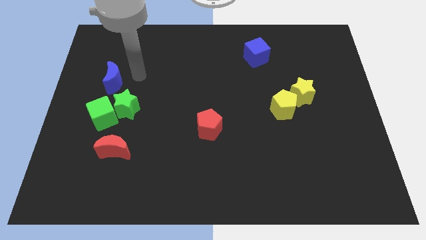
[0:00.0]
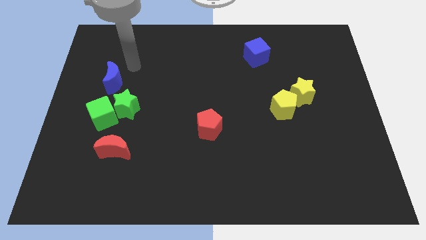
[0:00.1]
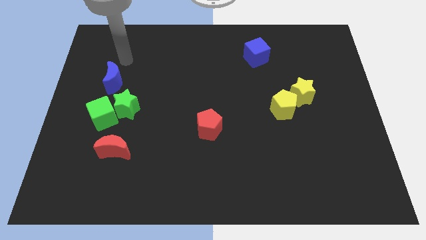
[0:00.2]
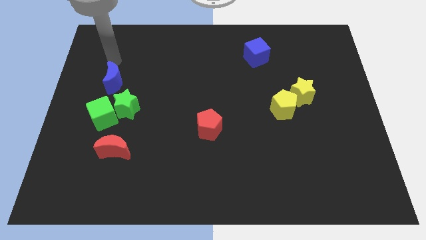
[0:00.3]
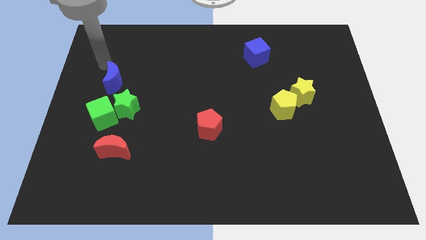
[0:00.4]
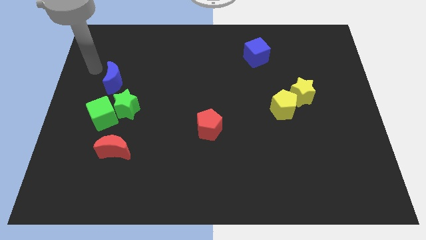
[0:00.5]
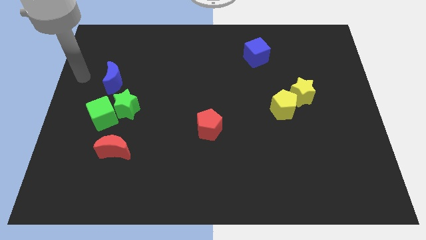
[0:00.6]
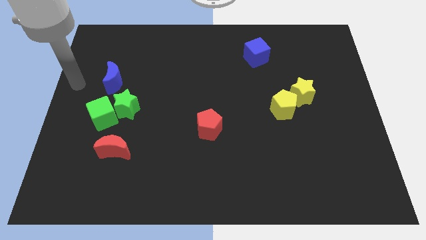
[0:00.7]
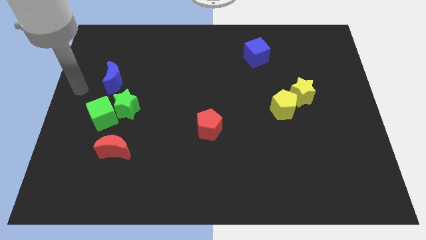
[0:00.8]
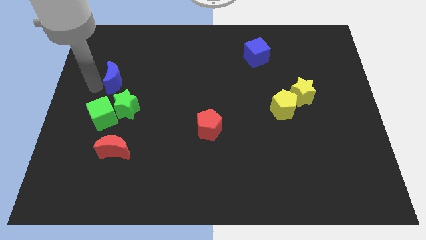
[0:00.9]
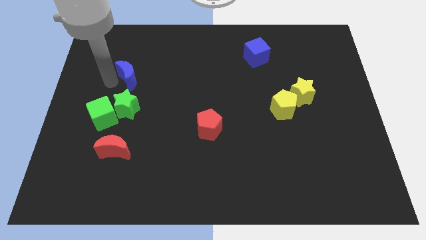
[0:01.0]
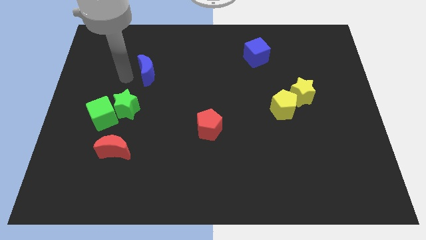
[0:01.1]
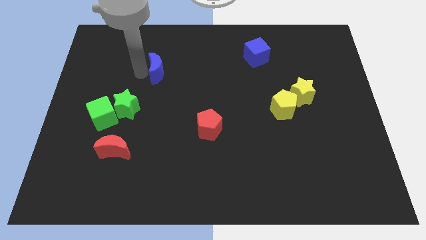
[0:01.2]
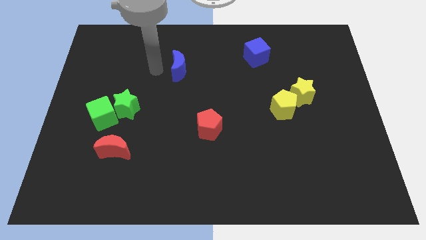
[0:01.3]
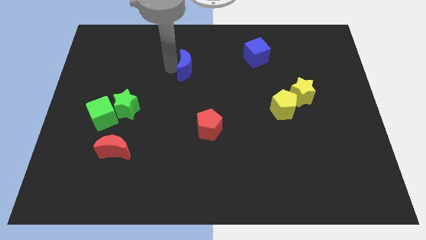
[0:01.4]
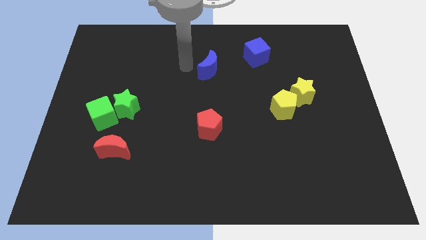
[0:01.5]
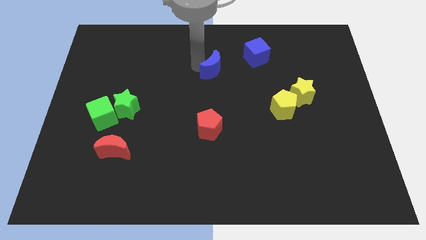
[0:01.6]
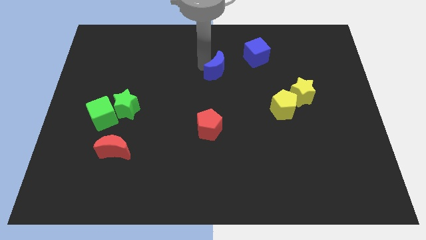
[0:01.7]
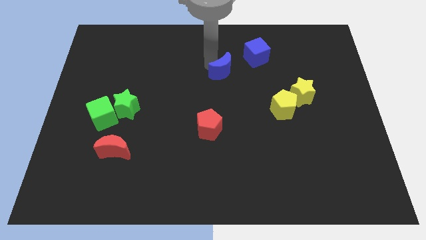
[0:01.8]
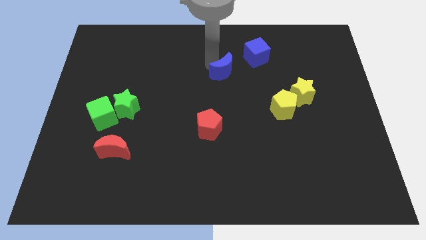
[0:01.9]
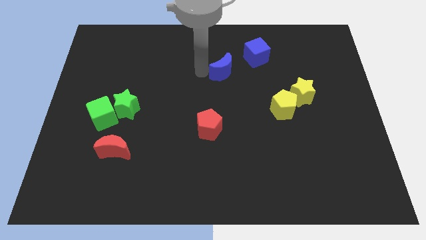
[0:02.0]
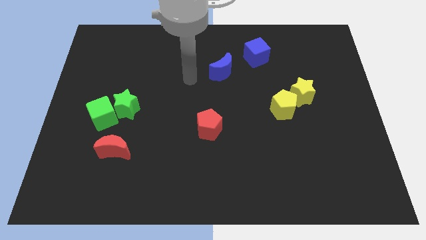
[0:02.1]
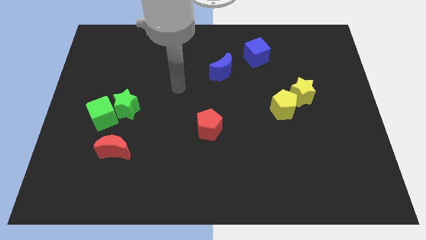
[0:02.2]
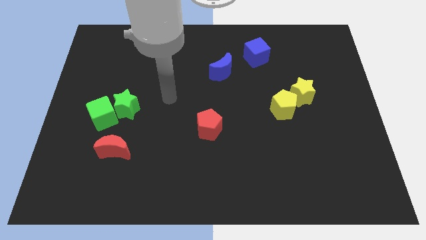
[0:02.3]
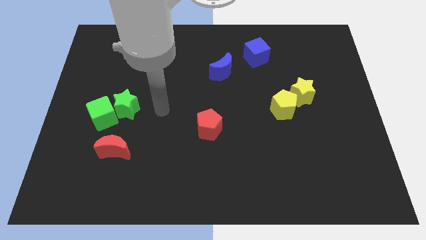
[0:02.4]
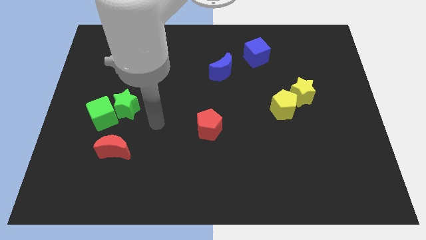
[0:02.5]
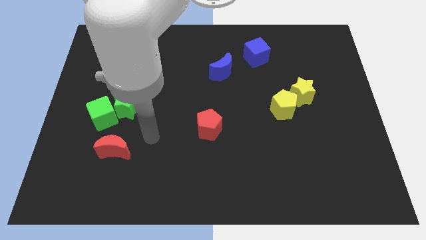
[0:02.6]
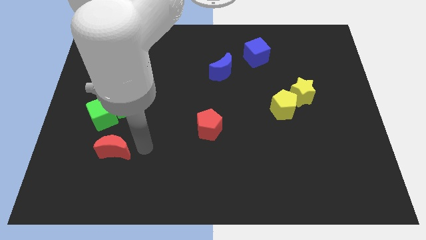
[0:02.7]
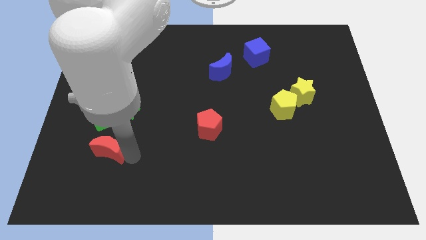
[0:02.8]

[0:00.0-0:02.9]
move the blue crescent towards the blue cube

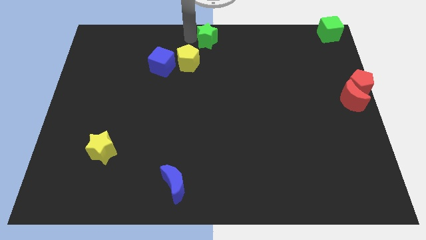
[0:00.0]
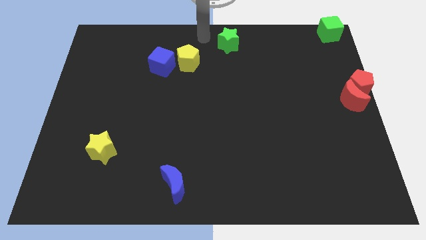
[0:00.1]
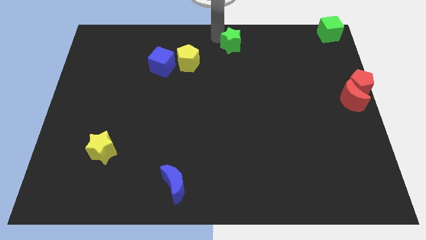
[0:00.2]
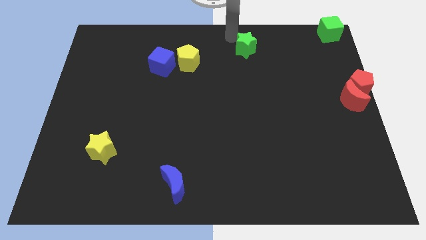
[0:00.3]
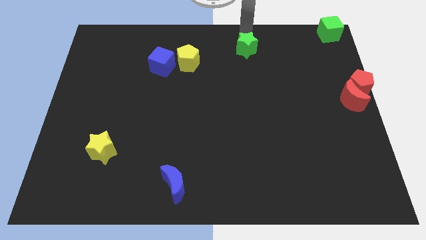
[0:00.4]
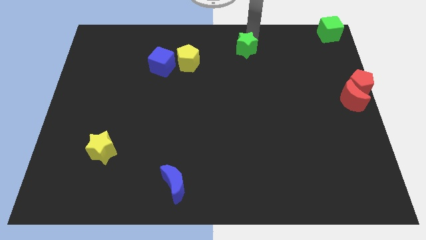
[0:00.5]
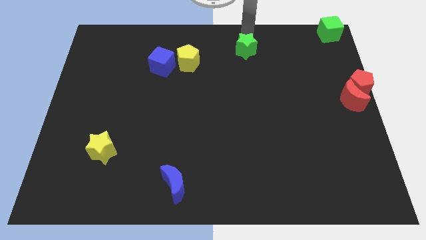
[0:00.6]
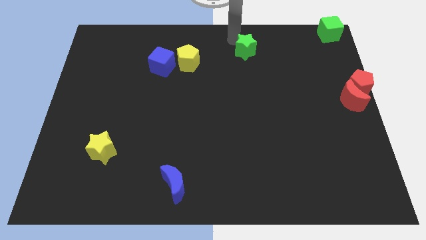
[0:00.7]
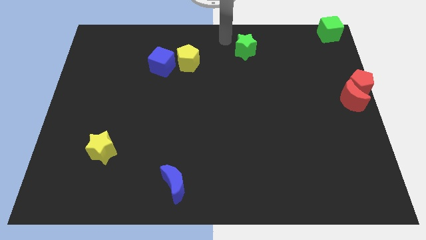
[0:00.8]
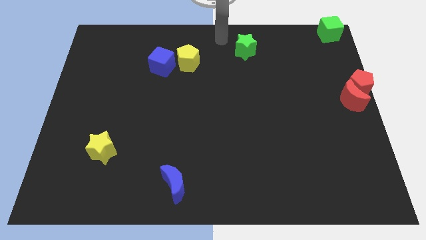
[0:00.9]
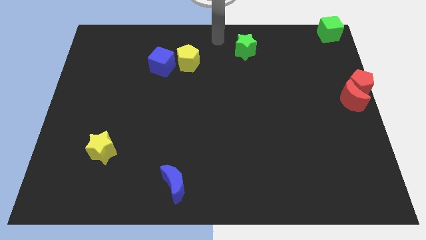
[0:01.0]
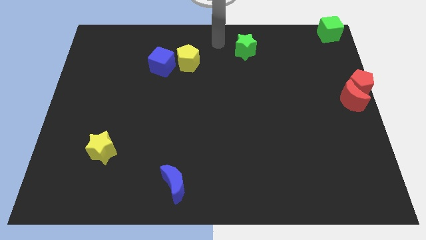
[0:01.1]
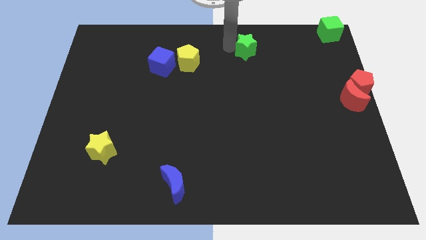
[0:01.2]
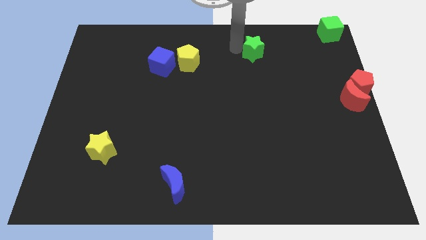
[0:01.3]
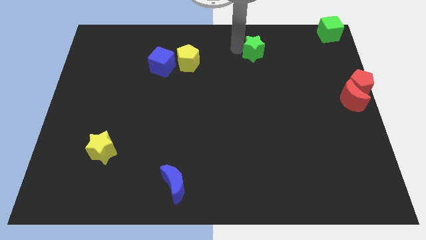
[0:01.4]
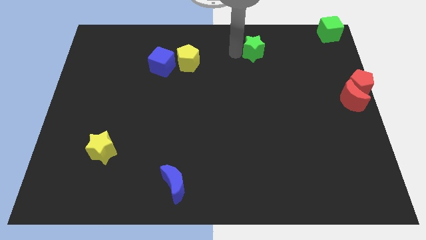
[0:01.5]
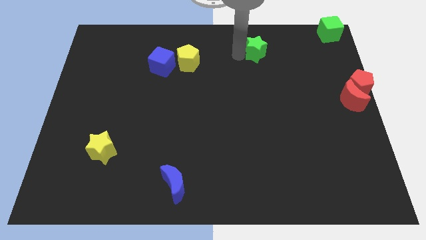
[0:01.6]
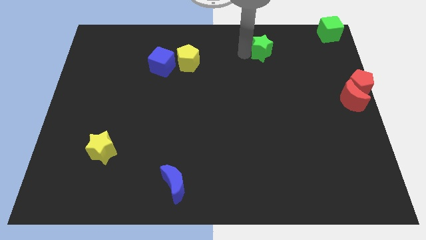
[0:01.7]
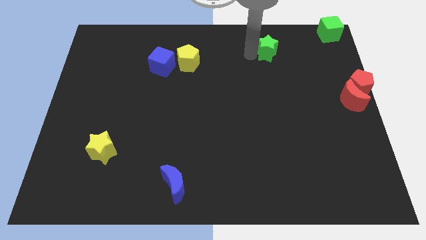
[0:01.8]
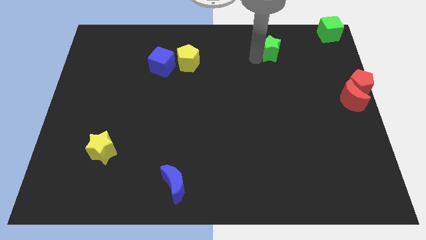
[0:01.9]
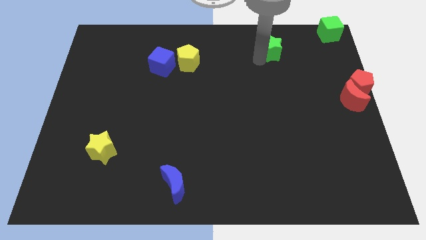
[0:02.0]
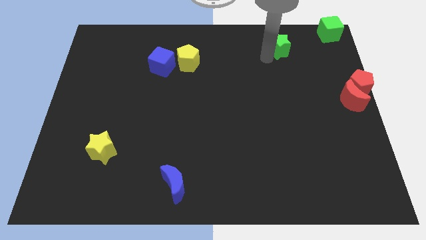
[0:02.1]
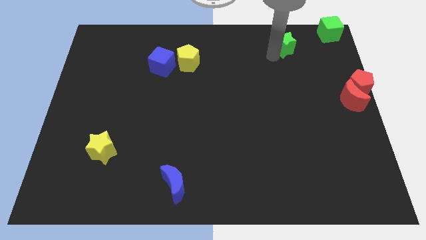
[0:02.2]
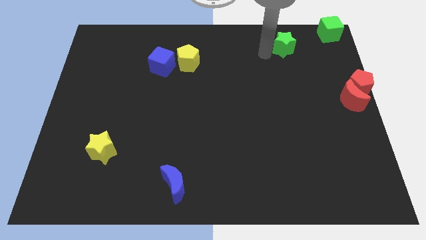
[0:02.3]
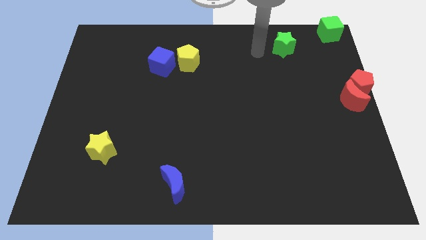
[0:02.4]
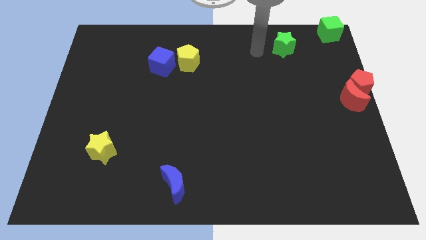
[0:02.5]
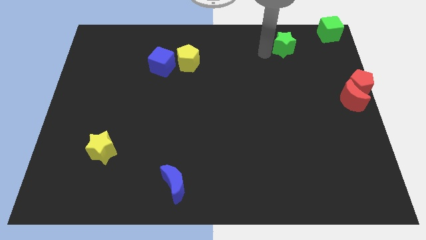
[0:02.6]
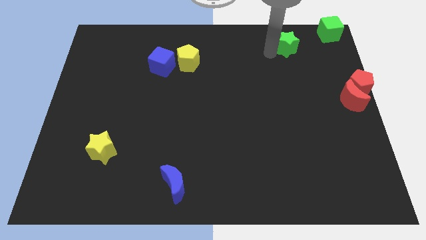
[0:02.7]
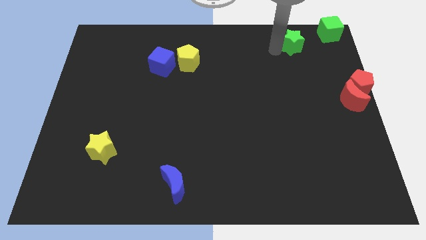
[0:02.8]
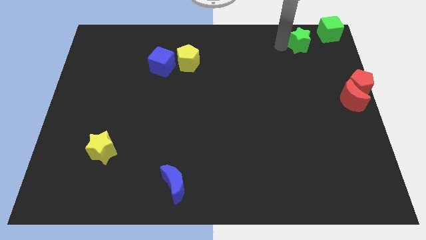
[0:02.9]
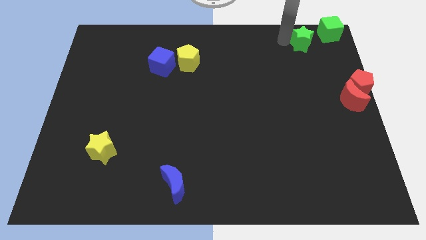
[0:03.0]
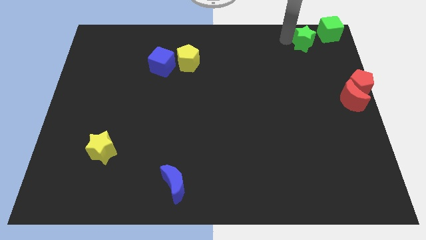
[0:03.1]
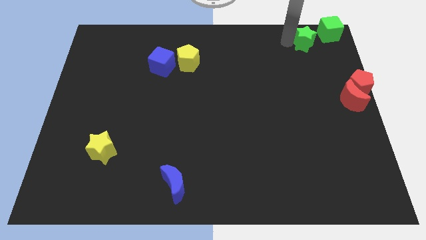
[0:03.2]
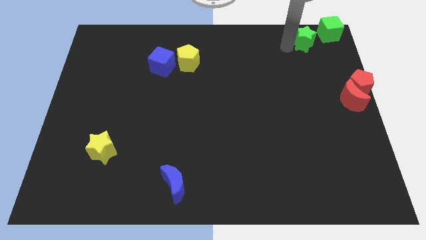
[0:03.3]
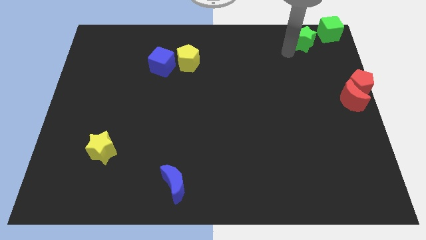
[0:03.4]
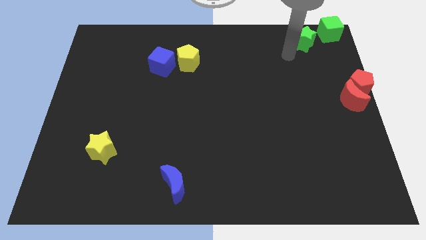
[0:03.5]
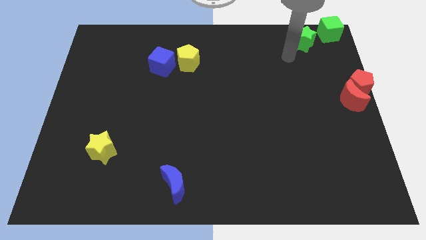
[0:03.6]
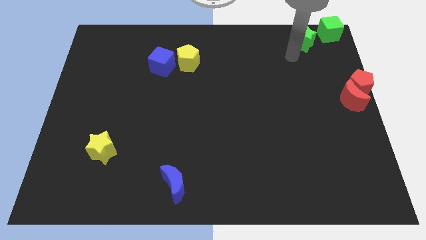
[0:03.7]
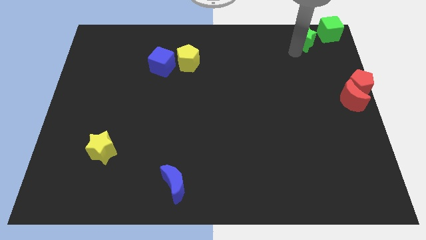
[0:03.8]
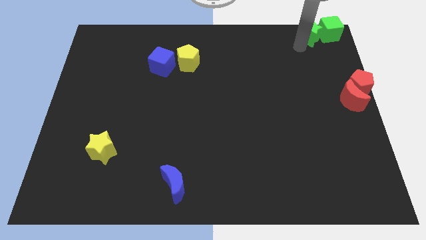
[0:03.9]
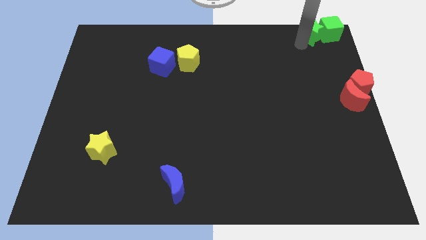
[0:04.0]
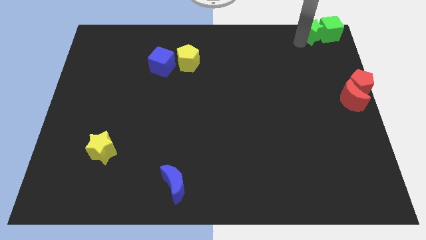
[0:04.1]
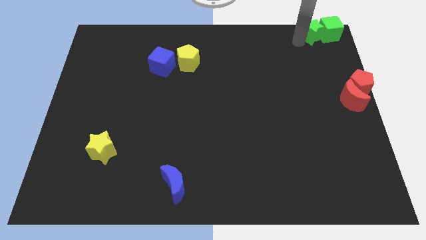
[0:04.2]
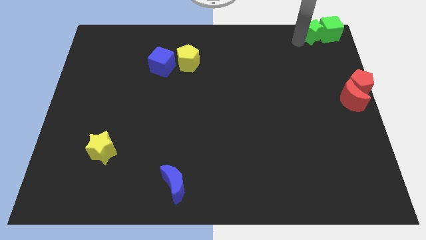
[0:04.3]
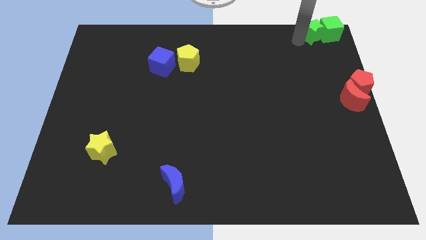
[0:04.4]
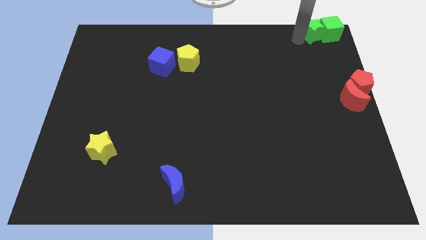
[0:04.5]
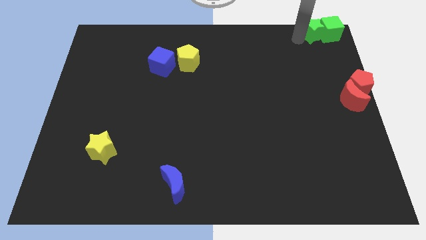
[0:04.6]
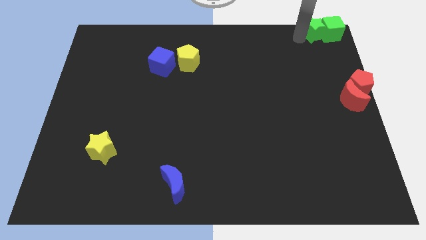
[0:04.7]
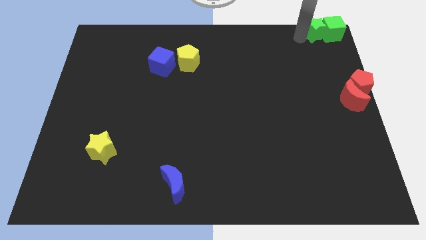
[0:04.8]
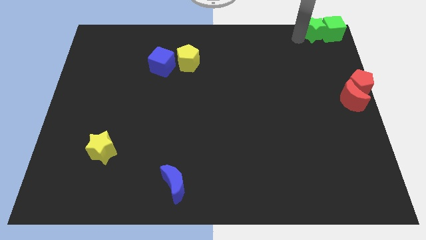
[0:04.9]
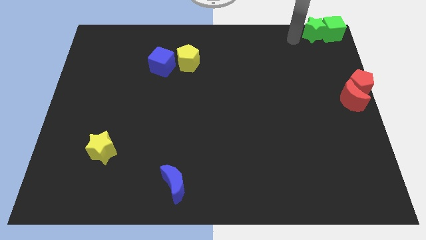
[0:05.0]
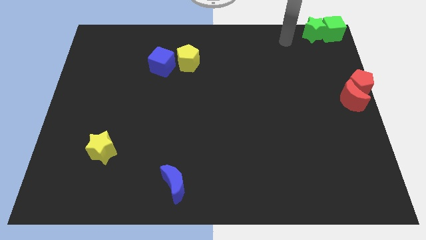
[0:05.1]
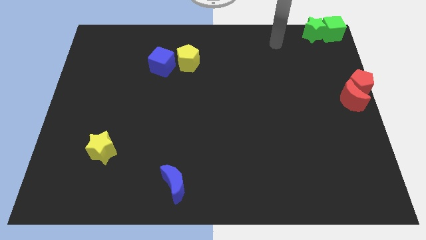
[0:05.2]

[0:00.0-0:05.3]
slide the green star into the green cube

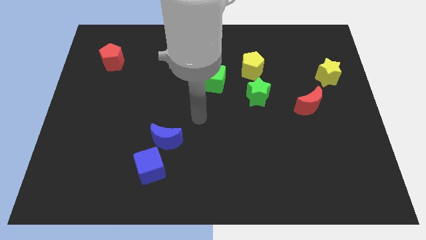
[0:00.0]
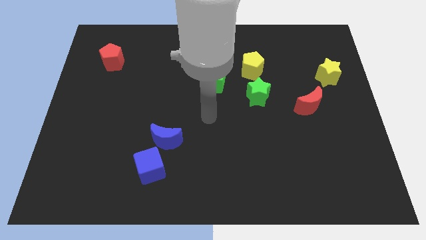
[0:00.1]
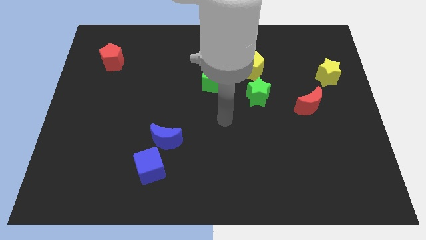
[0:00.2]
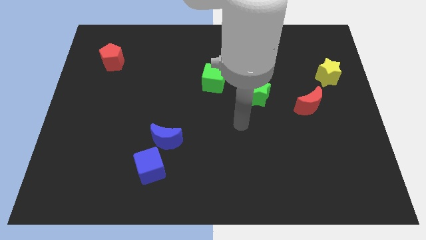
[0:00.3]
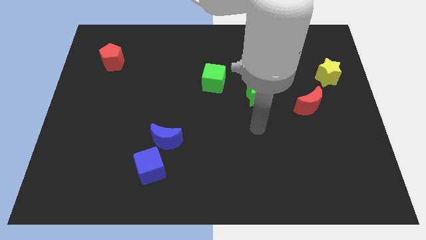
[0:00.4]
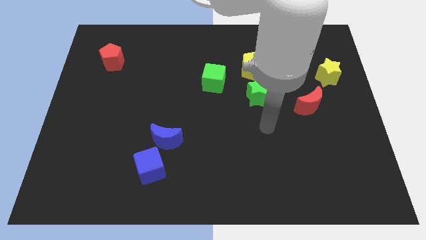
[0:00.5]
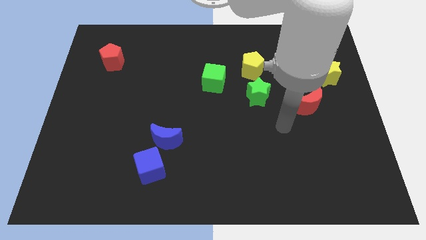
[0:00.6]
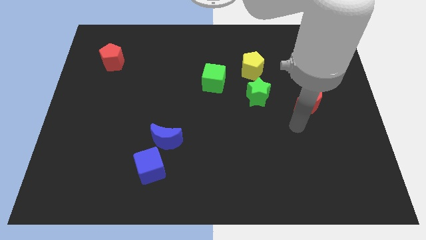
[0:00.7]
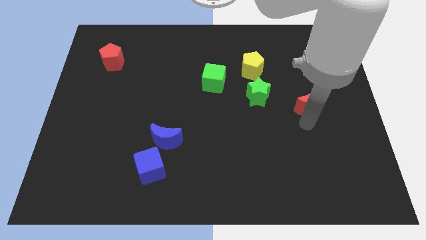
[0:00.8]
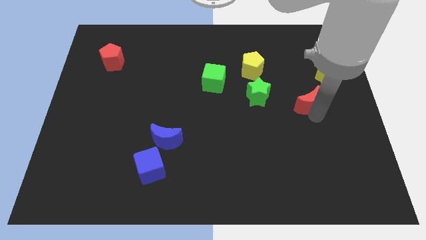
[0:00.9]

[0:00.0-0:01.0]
place your arm at the bottom of the red crescent
